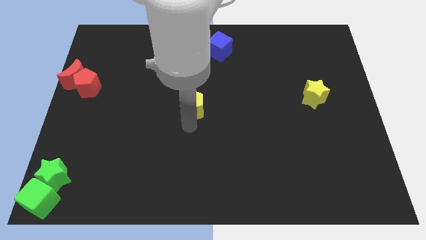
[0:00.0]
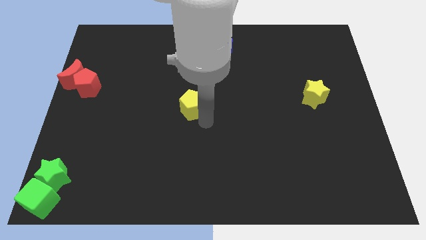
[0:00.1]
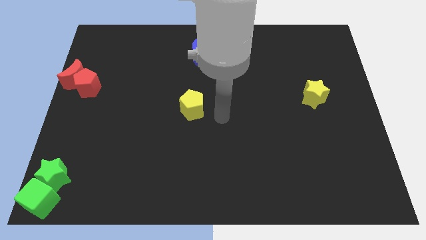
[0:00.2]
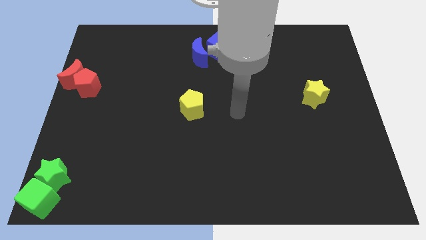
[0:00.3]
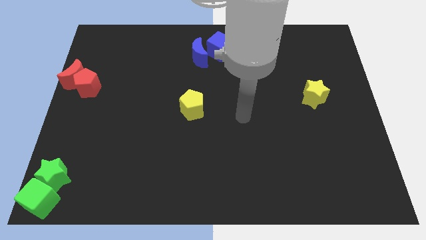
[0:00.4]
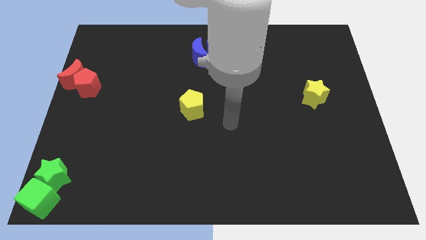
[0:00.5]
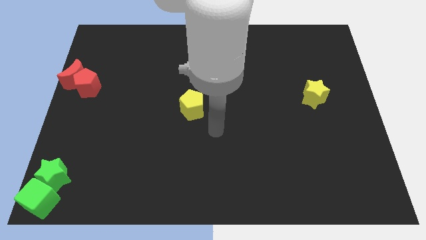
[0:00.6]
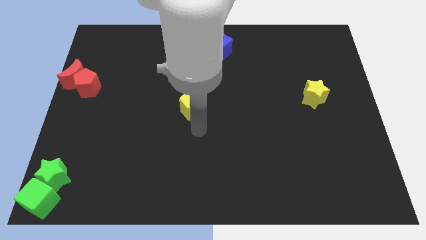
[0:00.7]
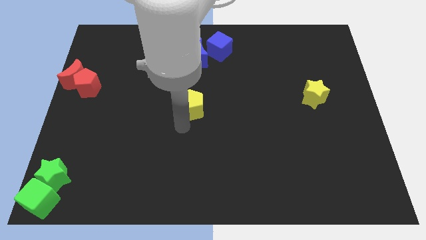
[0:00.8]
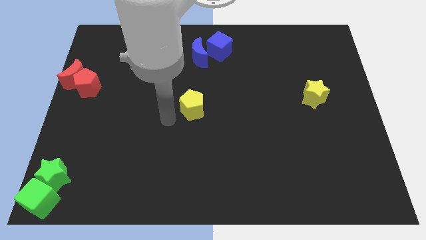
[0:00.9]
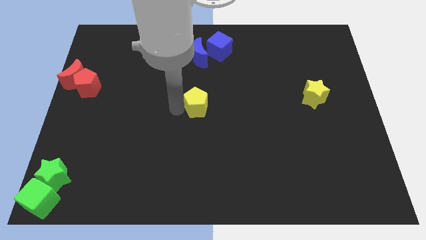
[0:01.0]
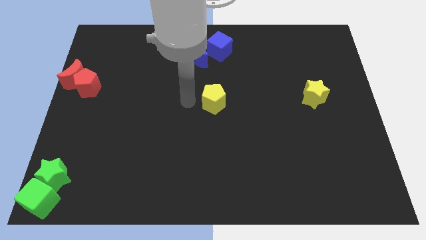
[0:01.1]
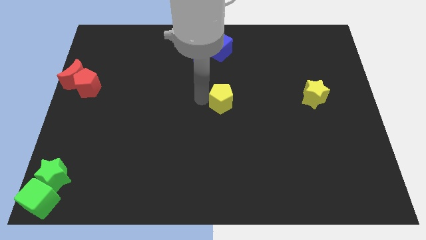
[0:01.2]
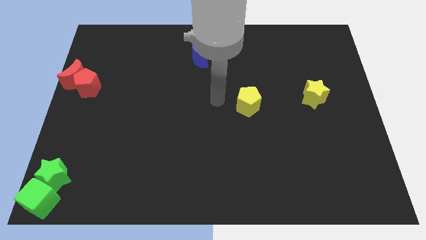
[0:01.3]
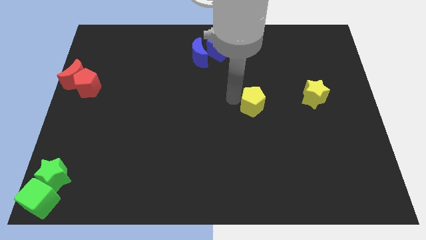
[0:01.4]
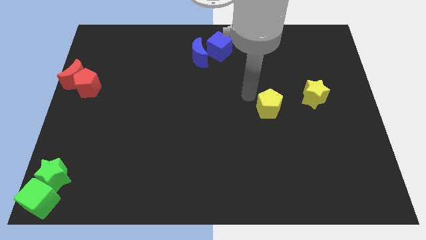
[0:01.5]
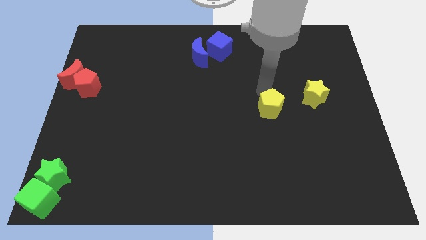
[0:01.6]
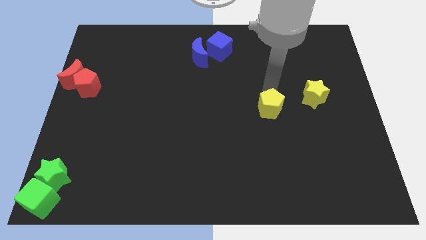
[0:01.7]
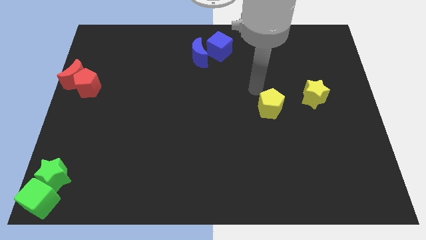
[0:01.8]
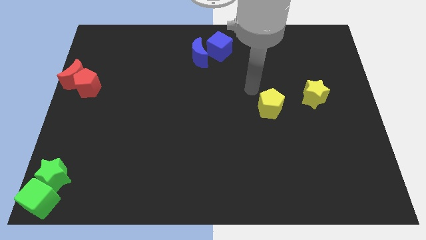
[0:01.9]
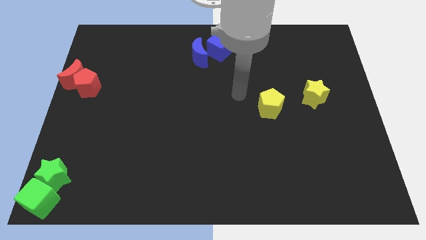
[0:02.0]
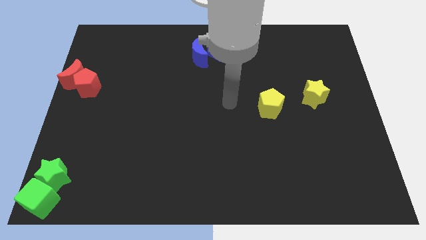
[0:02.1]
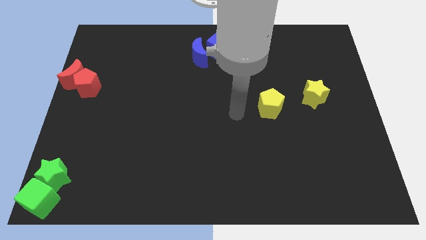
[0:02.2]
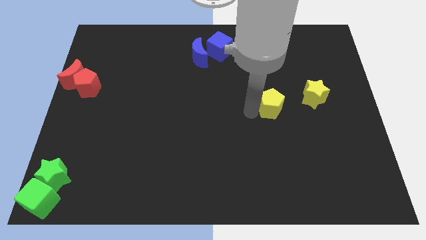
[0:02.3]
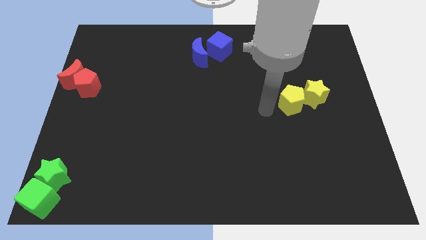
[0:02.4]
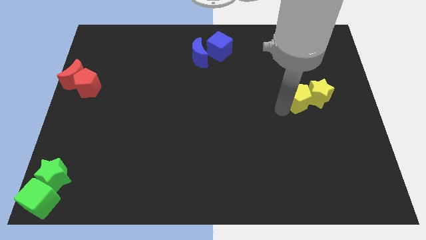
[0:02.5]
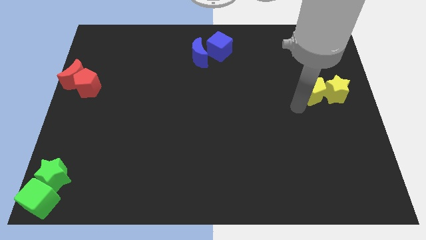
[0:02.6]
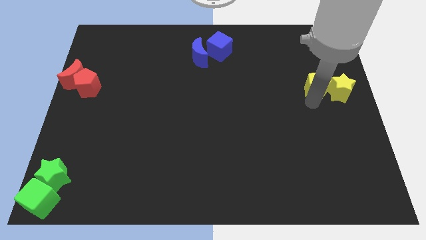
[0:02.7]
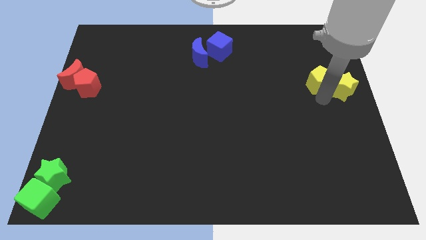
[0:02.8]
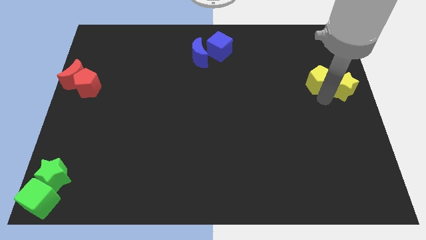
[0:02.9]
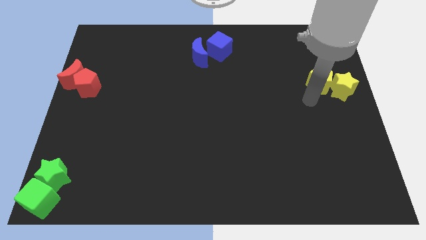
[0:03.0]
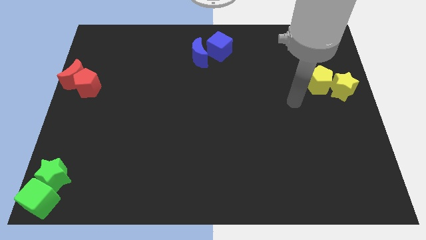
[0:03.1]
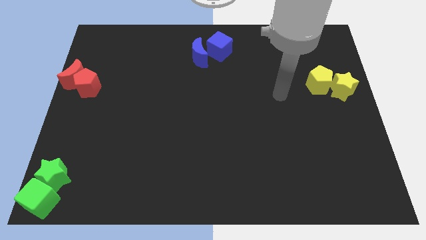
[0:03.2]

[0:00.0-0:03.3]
move the yellow pentagon into the yellow star

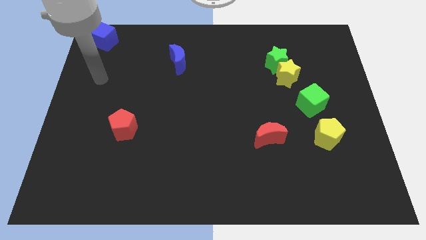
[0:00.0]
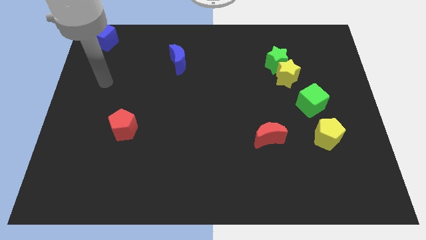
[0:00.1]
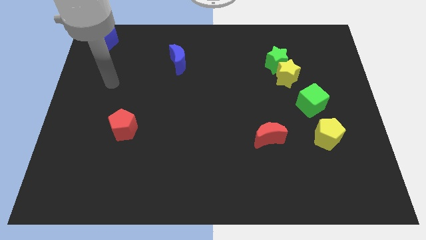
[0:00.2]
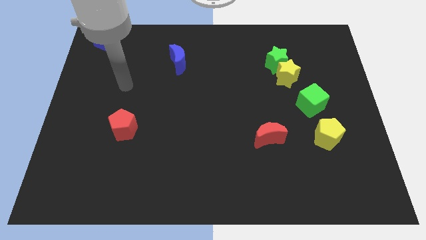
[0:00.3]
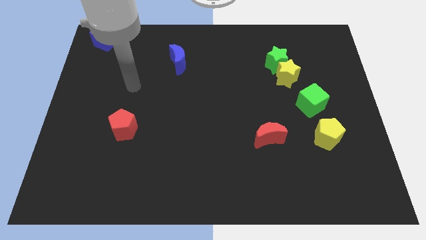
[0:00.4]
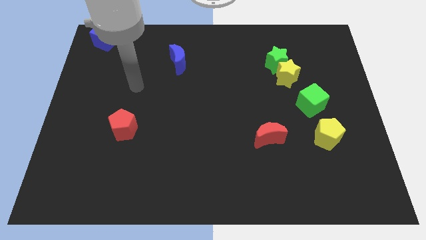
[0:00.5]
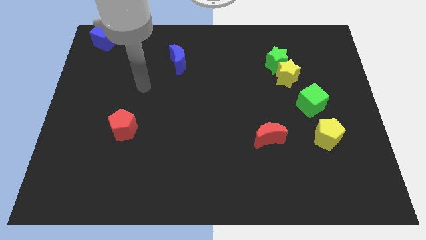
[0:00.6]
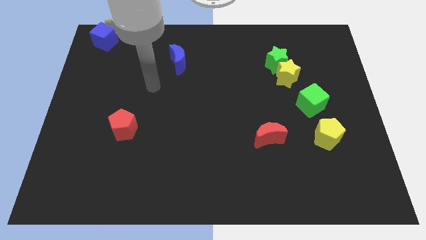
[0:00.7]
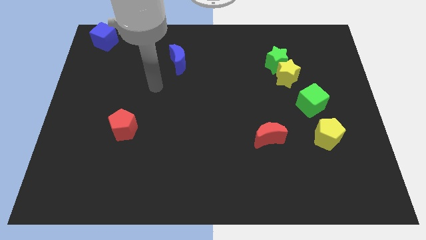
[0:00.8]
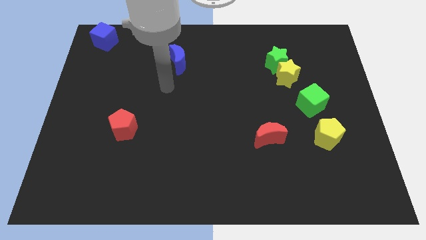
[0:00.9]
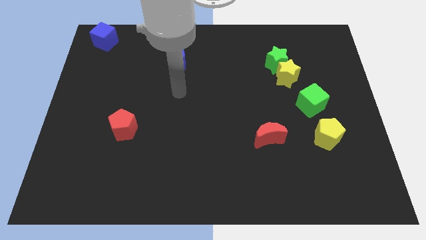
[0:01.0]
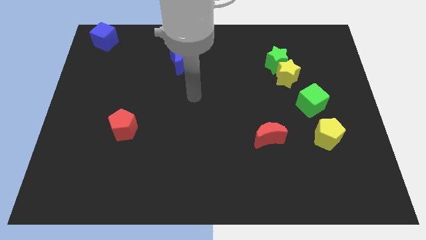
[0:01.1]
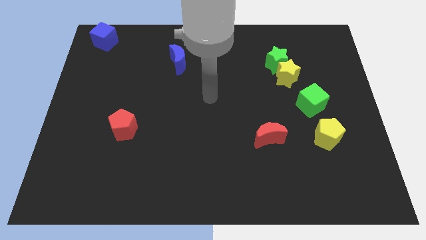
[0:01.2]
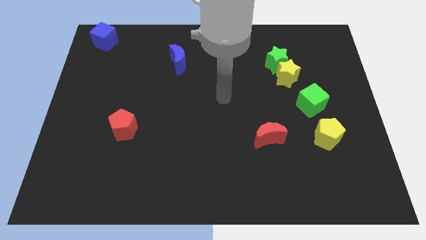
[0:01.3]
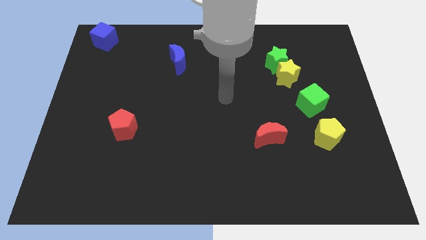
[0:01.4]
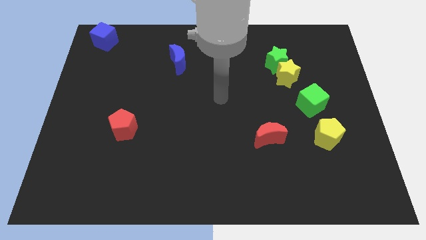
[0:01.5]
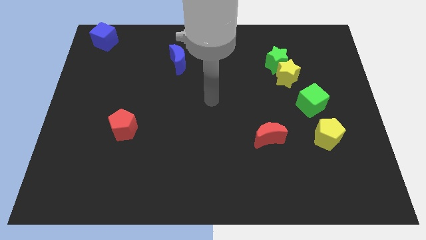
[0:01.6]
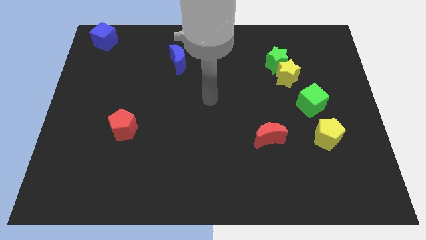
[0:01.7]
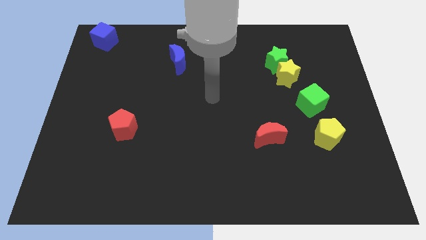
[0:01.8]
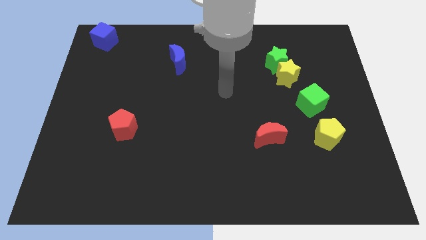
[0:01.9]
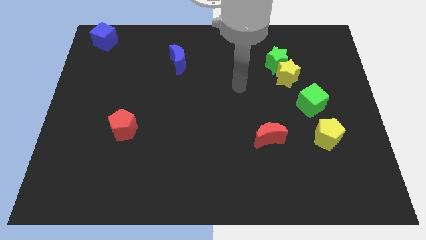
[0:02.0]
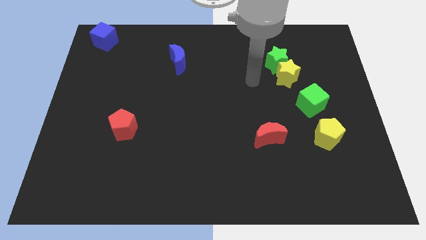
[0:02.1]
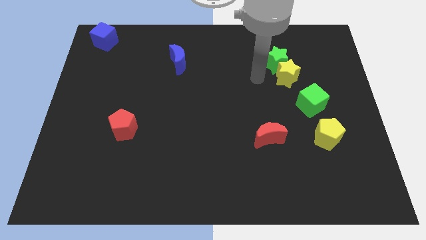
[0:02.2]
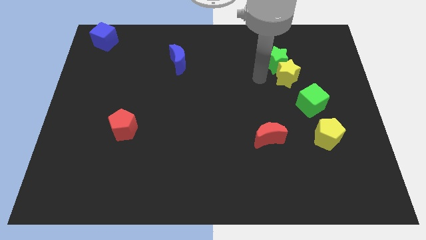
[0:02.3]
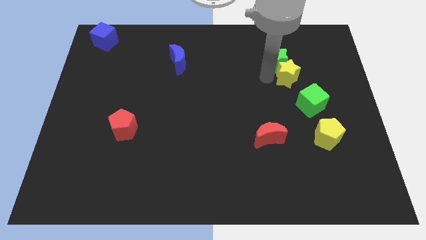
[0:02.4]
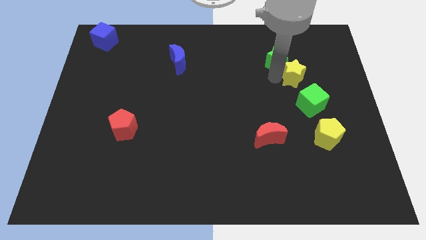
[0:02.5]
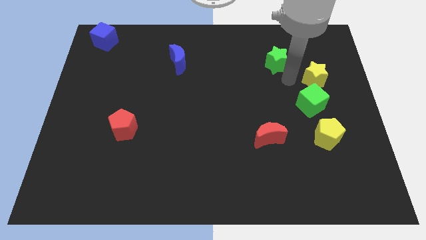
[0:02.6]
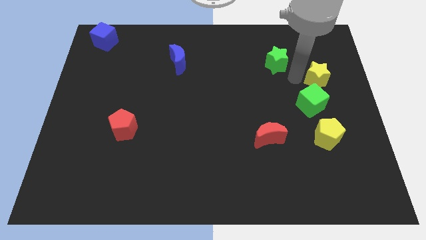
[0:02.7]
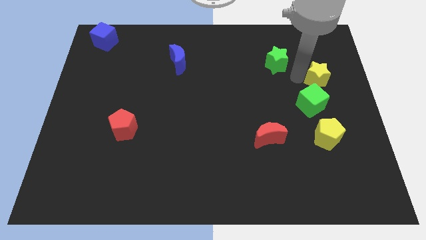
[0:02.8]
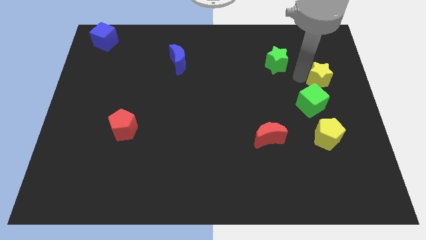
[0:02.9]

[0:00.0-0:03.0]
push yellow star slightly forward

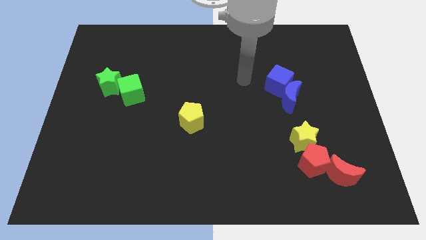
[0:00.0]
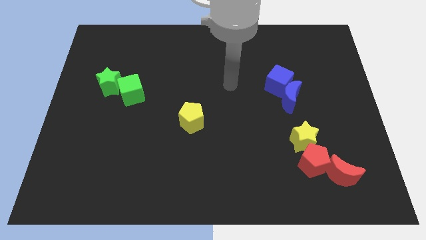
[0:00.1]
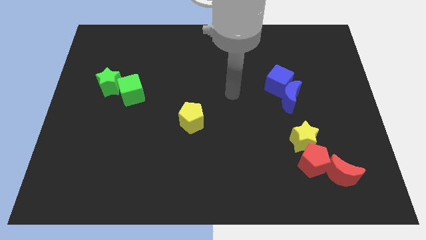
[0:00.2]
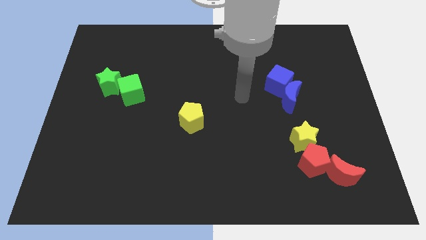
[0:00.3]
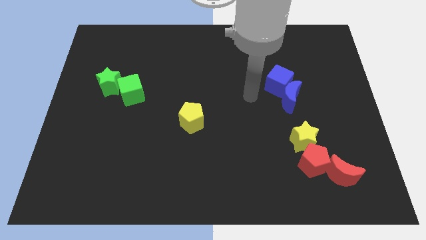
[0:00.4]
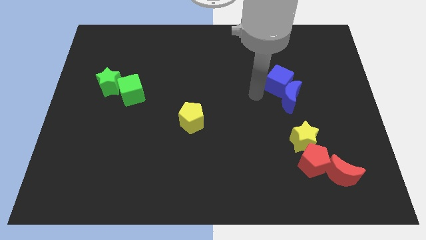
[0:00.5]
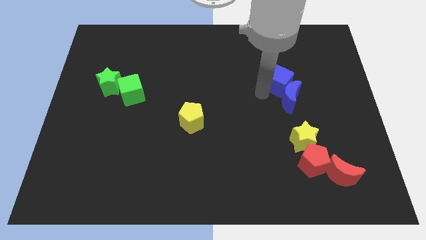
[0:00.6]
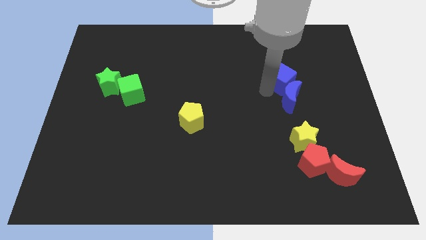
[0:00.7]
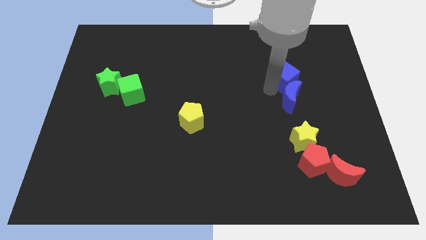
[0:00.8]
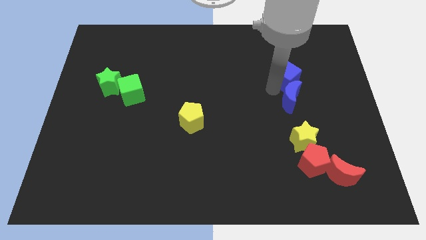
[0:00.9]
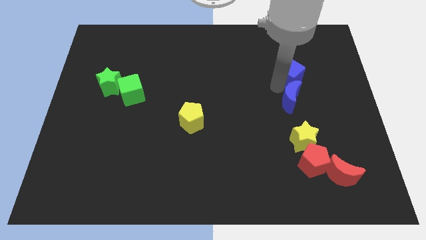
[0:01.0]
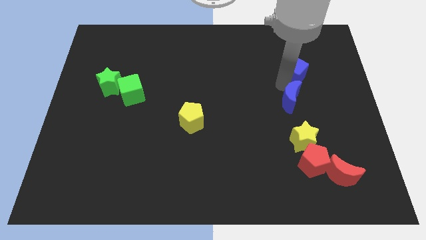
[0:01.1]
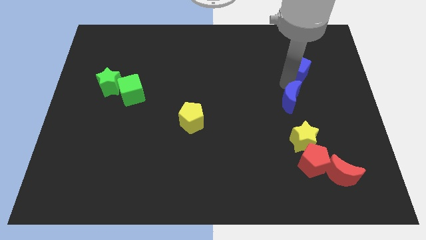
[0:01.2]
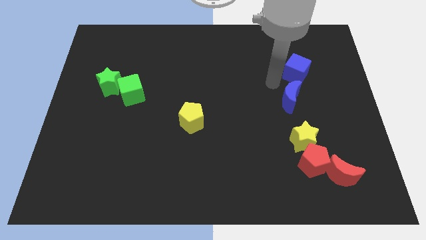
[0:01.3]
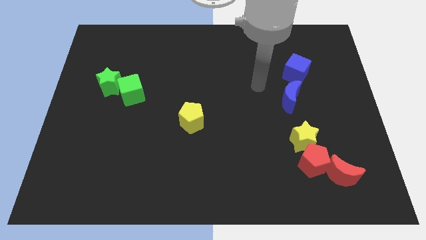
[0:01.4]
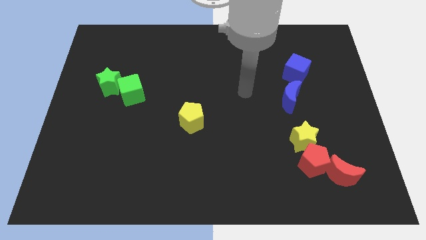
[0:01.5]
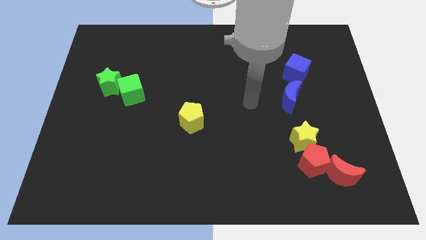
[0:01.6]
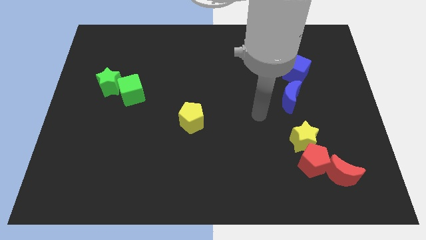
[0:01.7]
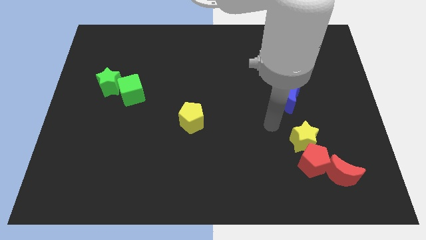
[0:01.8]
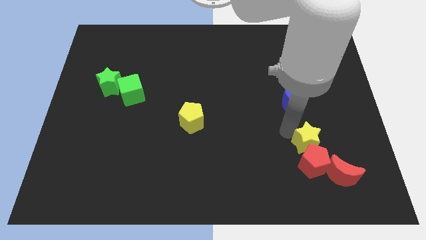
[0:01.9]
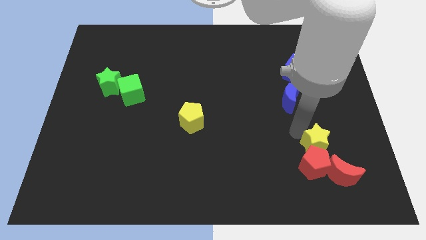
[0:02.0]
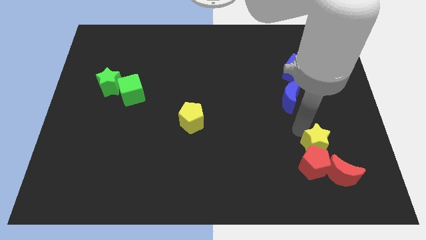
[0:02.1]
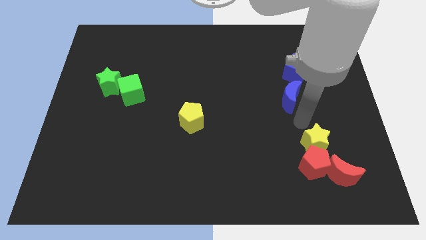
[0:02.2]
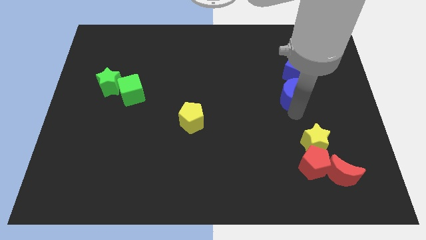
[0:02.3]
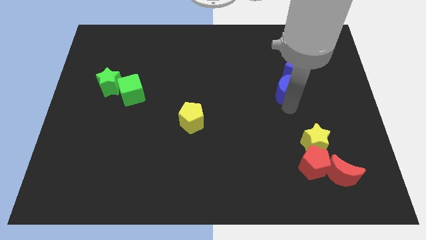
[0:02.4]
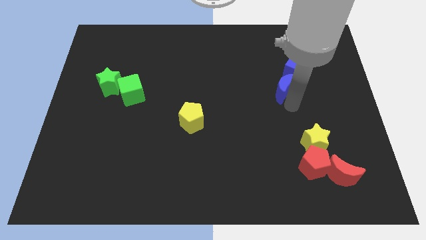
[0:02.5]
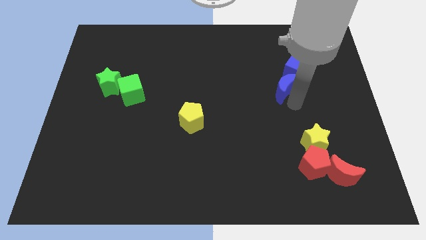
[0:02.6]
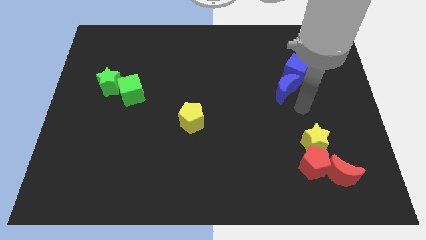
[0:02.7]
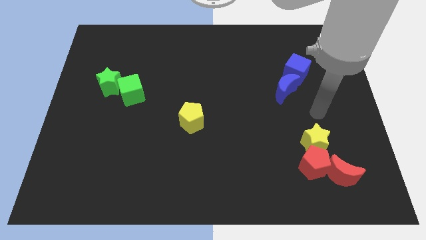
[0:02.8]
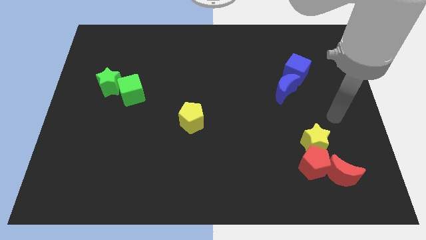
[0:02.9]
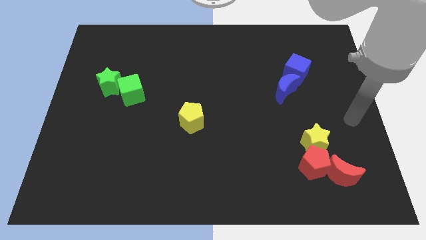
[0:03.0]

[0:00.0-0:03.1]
push blue moon into the blue cube
